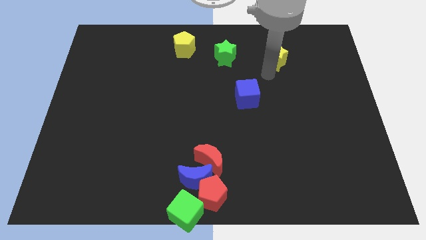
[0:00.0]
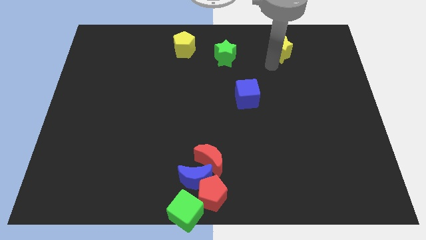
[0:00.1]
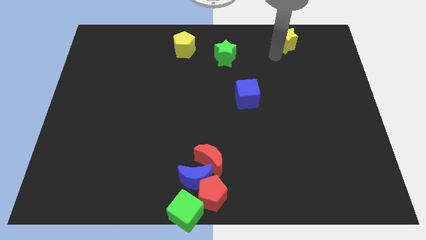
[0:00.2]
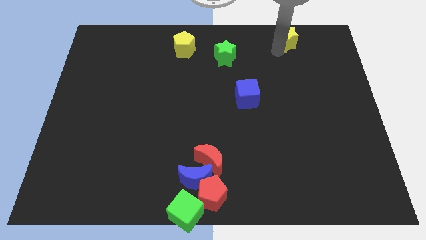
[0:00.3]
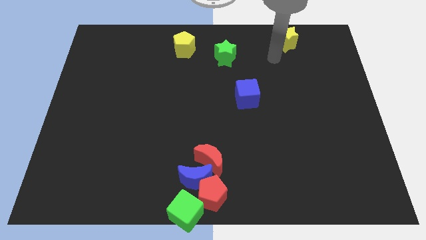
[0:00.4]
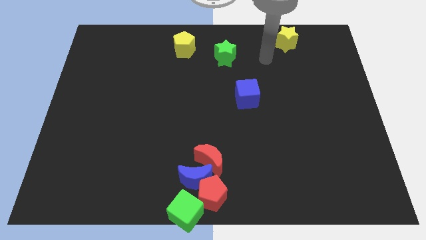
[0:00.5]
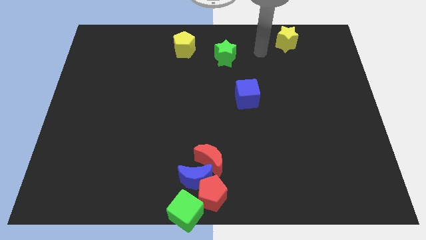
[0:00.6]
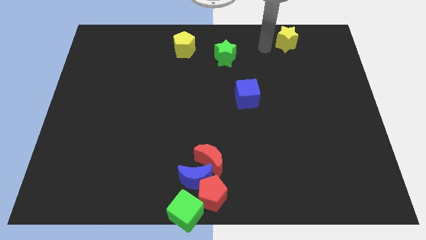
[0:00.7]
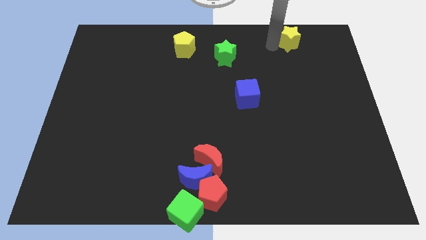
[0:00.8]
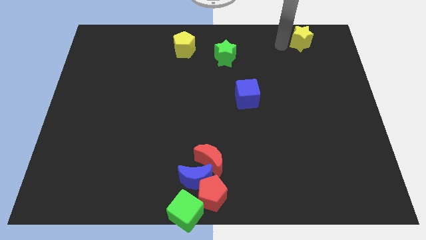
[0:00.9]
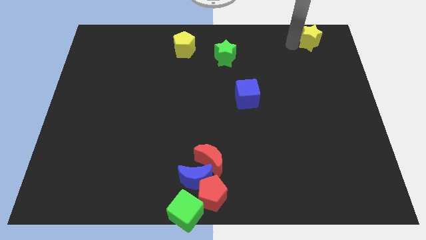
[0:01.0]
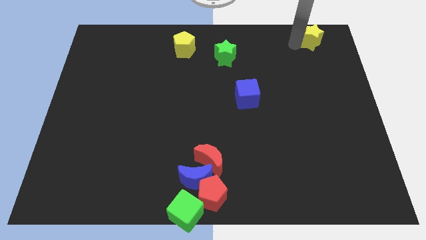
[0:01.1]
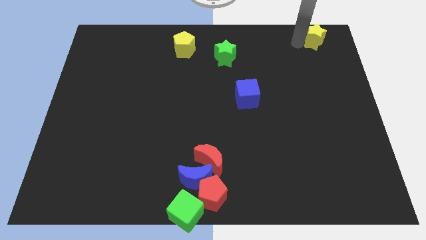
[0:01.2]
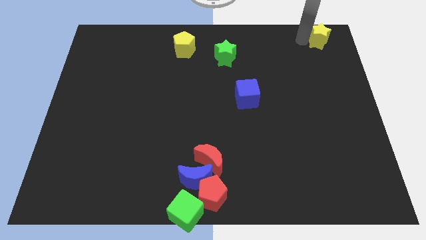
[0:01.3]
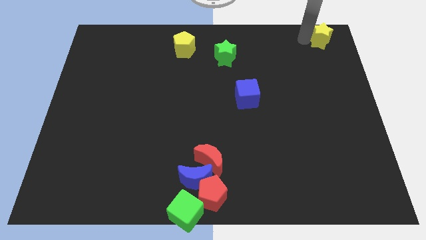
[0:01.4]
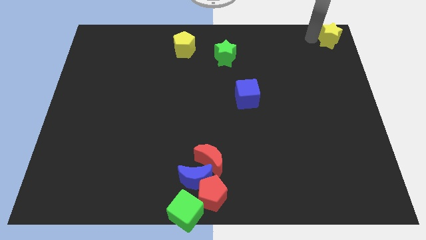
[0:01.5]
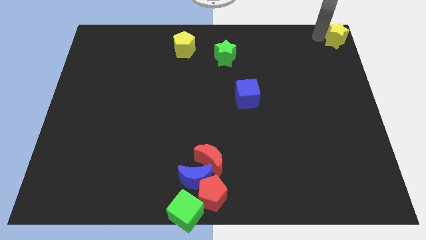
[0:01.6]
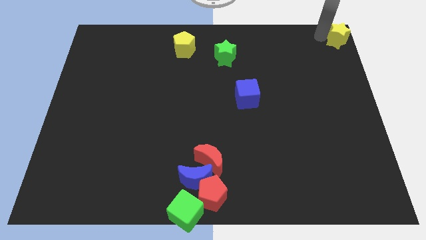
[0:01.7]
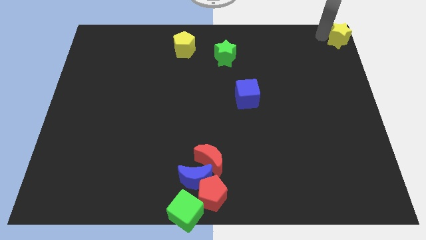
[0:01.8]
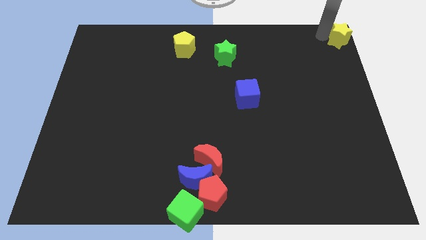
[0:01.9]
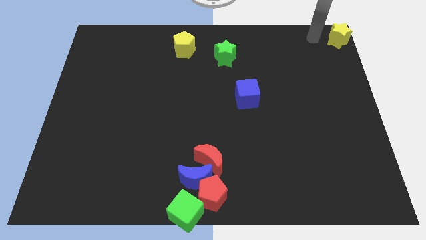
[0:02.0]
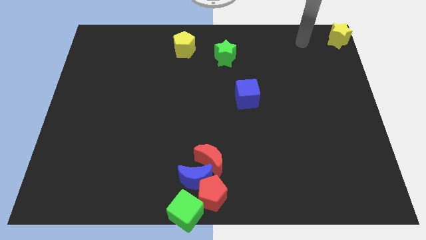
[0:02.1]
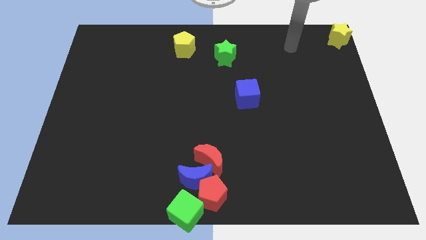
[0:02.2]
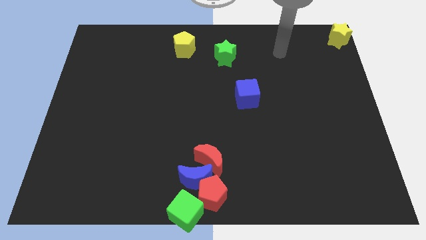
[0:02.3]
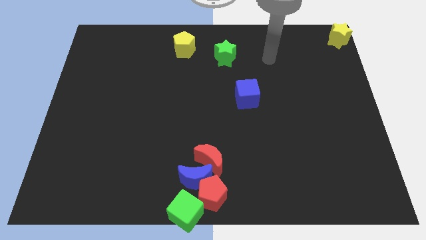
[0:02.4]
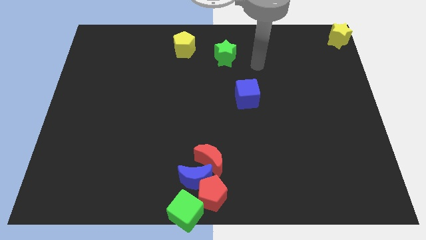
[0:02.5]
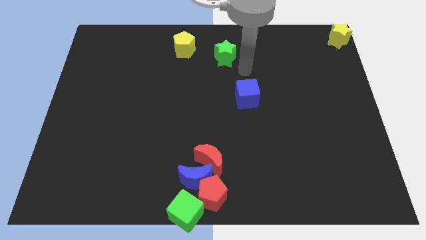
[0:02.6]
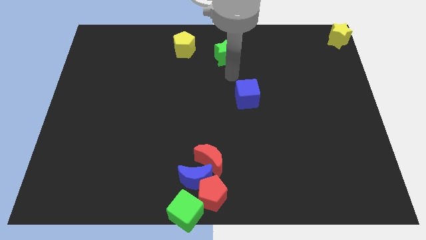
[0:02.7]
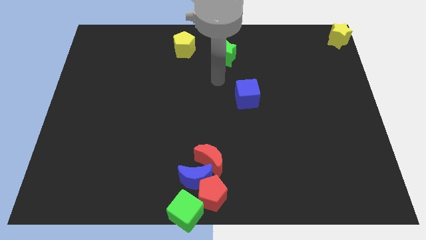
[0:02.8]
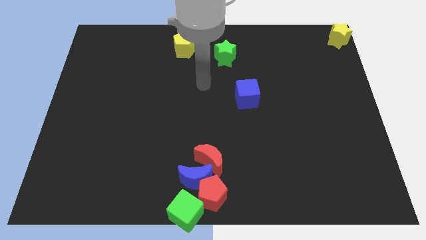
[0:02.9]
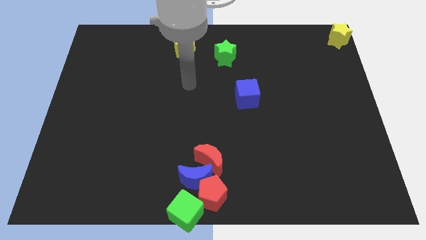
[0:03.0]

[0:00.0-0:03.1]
place the yellow star at the top right corner

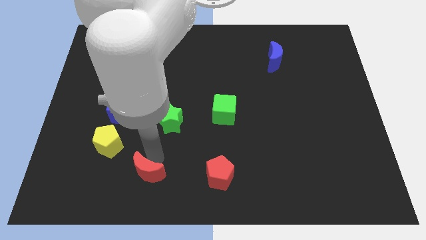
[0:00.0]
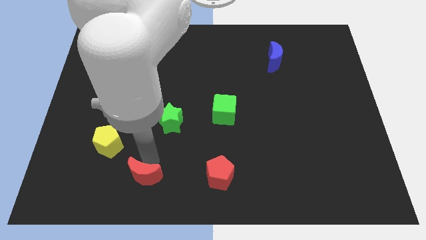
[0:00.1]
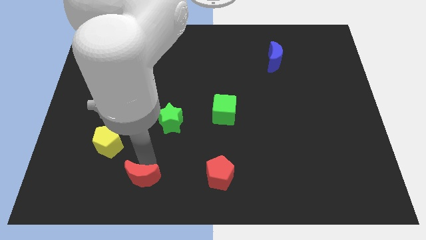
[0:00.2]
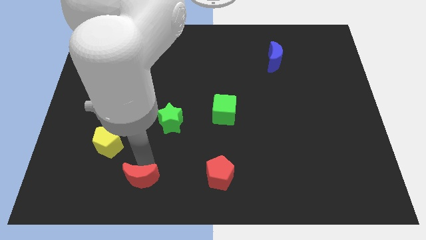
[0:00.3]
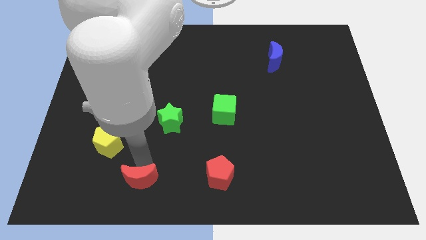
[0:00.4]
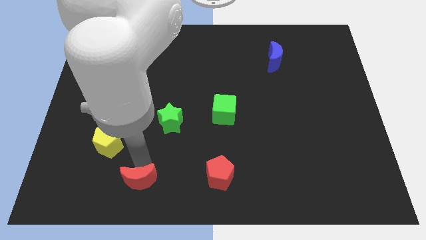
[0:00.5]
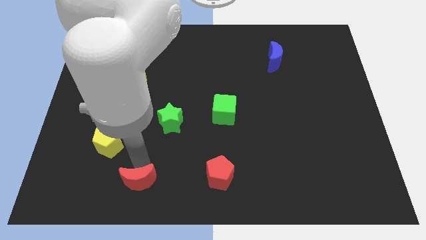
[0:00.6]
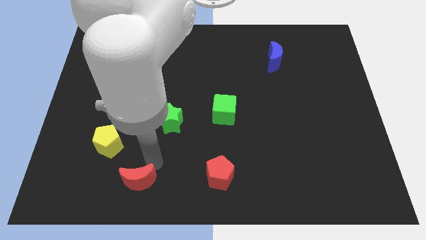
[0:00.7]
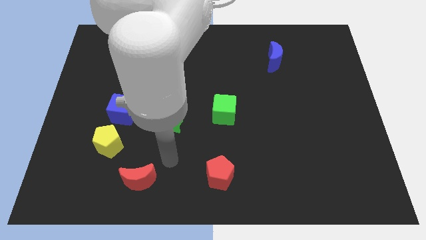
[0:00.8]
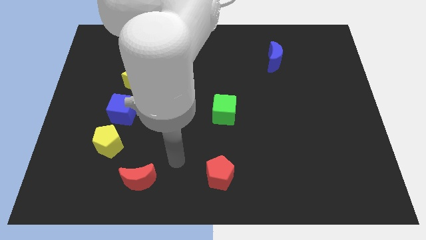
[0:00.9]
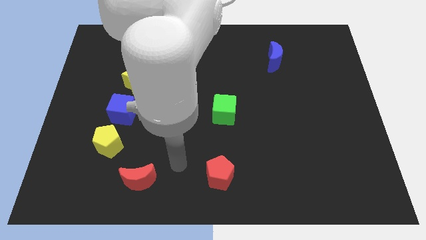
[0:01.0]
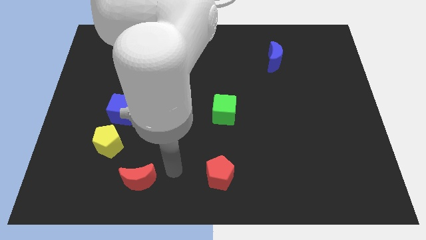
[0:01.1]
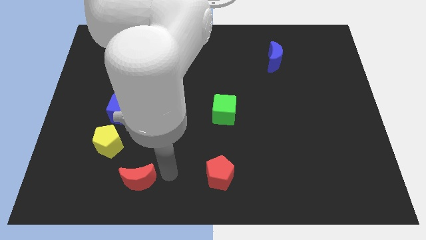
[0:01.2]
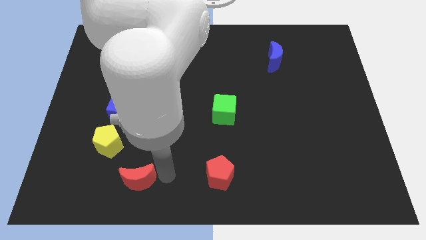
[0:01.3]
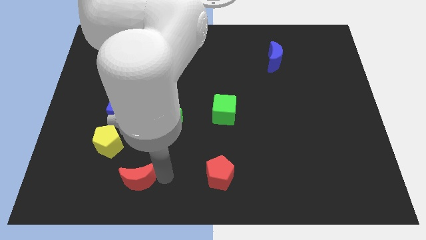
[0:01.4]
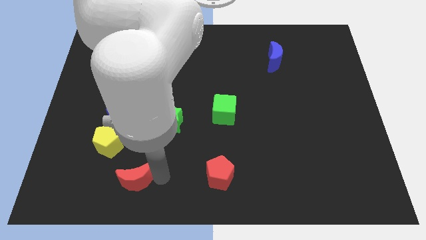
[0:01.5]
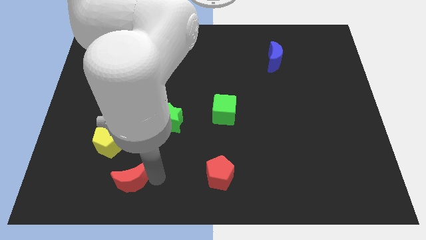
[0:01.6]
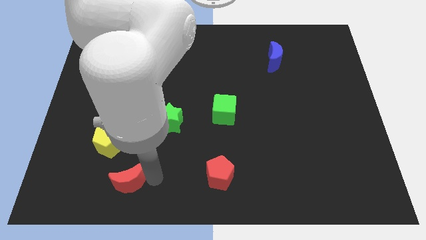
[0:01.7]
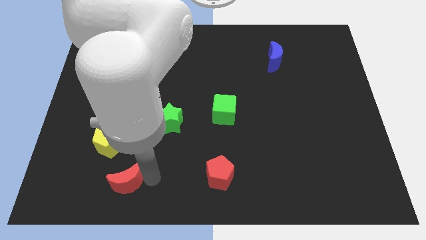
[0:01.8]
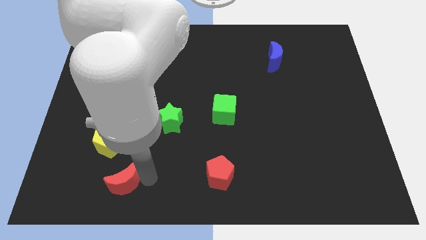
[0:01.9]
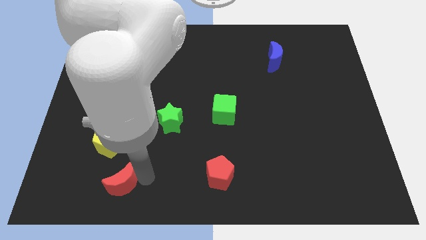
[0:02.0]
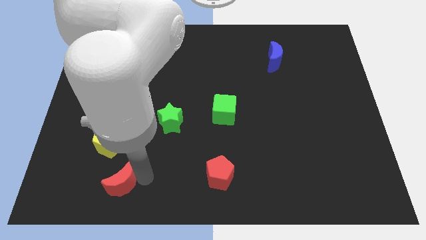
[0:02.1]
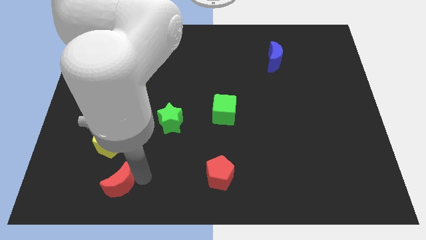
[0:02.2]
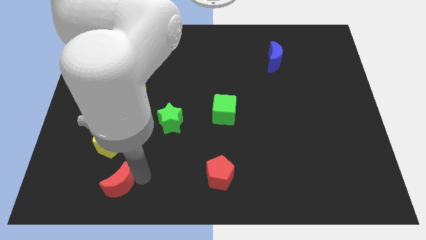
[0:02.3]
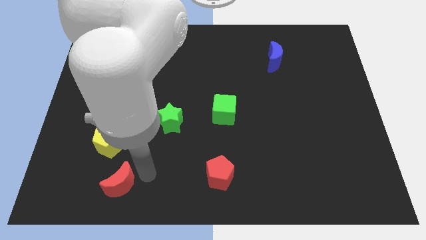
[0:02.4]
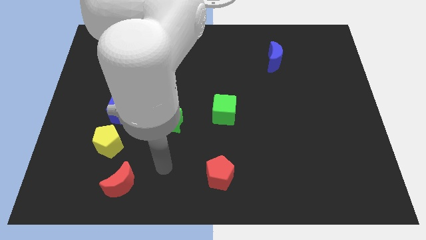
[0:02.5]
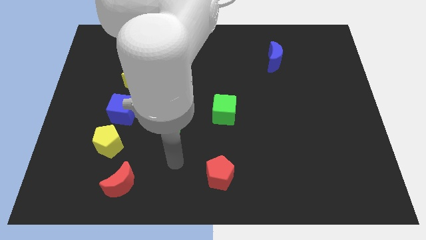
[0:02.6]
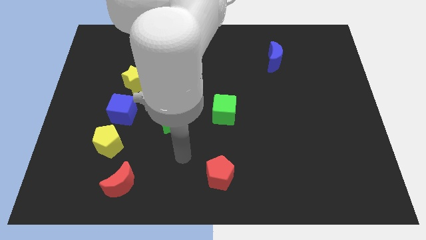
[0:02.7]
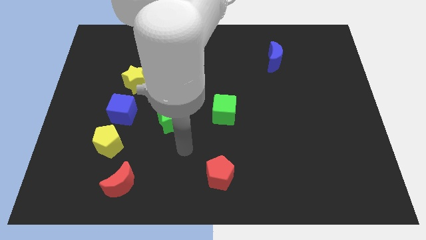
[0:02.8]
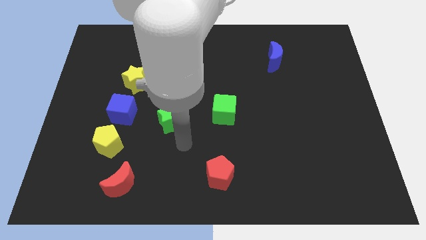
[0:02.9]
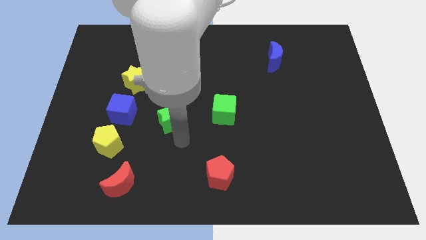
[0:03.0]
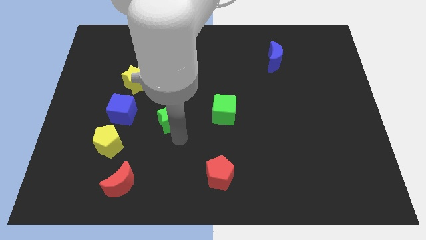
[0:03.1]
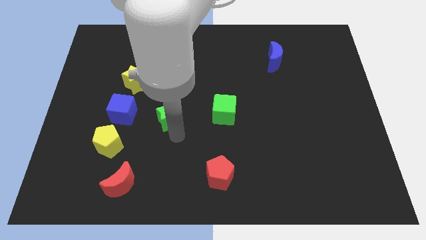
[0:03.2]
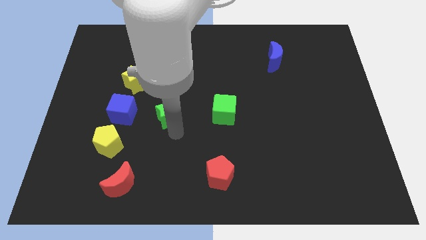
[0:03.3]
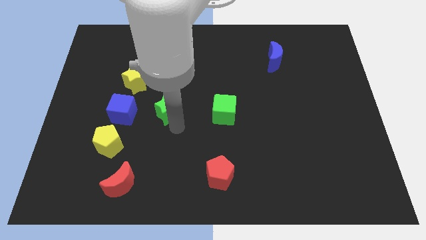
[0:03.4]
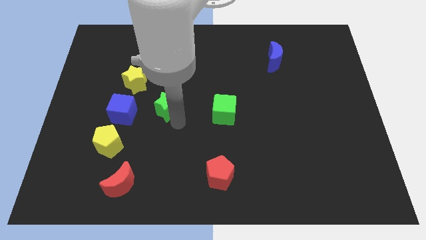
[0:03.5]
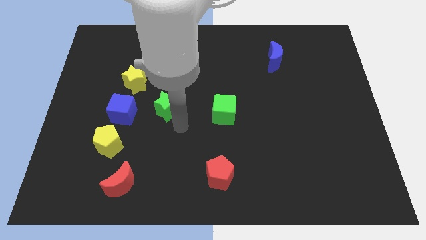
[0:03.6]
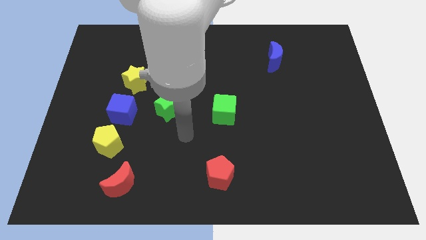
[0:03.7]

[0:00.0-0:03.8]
push green star slightly upwards

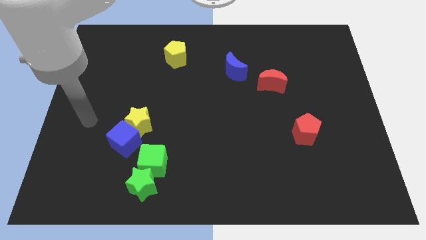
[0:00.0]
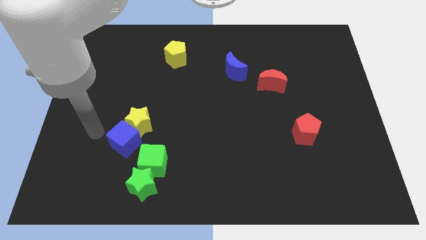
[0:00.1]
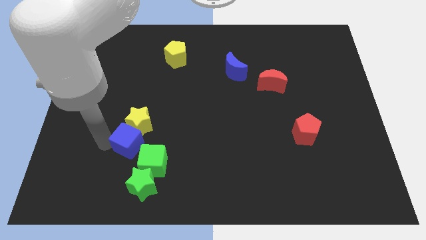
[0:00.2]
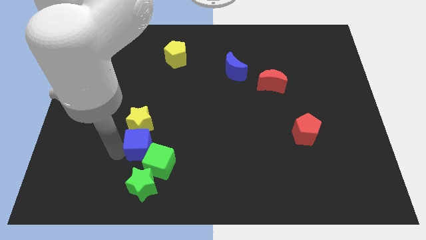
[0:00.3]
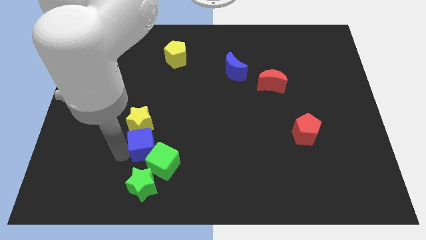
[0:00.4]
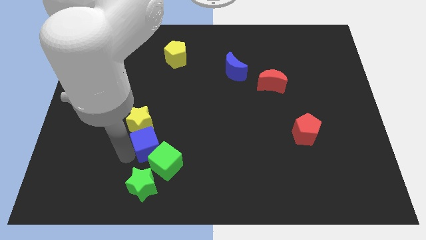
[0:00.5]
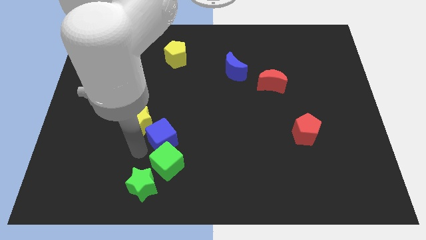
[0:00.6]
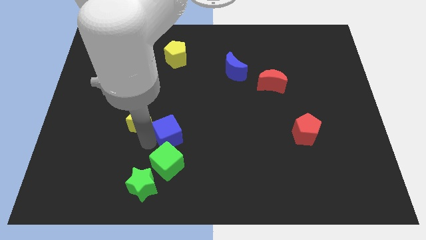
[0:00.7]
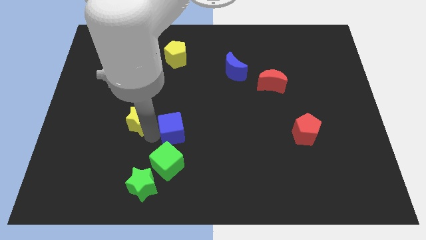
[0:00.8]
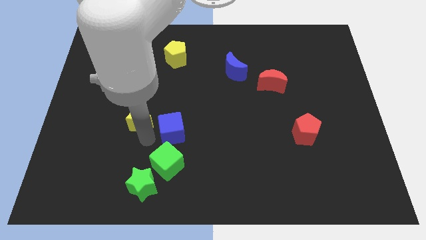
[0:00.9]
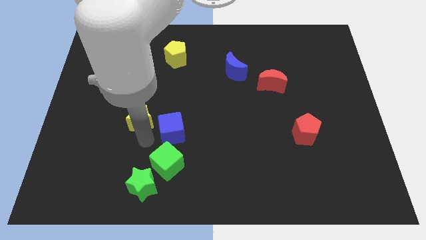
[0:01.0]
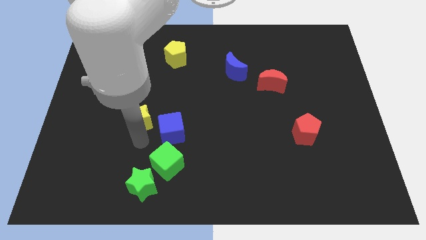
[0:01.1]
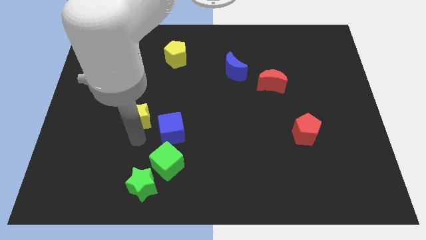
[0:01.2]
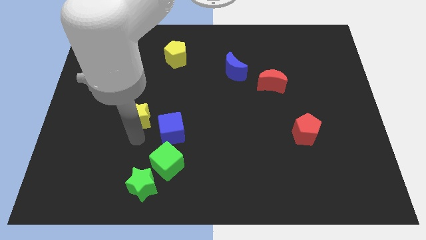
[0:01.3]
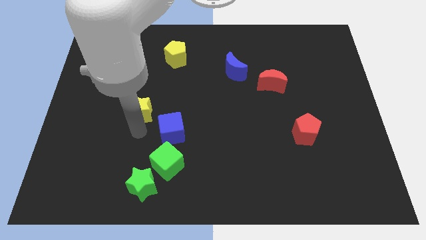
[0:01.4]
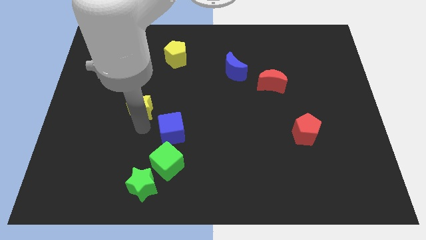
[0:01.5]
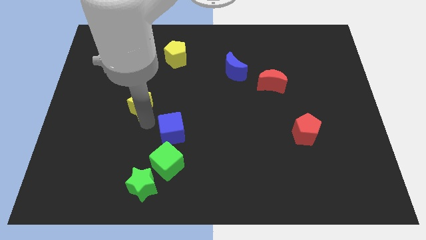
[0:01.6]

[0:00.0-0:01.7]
separate the yellow star and the blue cube

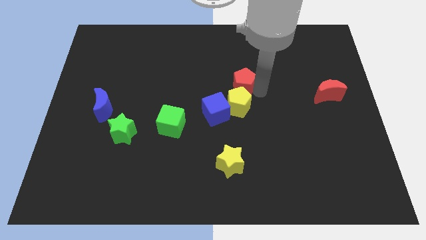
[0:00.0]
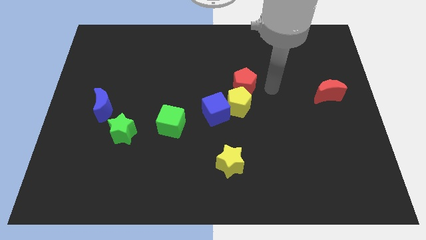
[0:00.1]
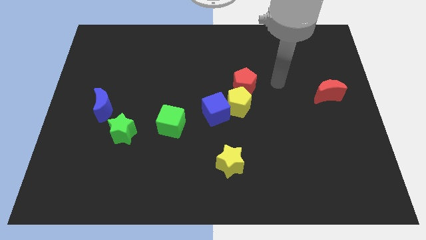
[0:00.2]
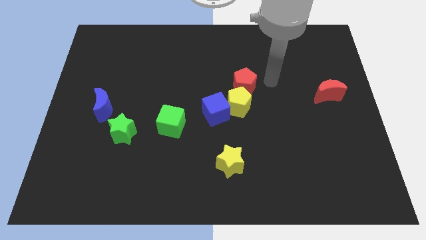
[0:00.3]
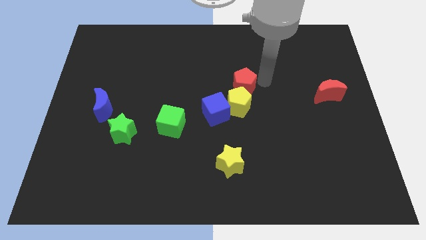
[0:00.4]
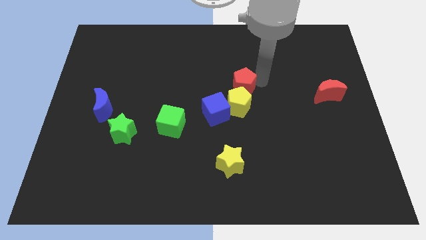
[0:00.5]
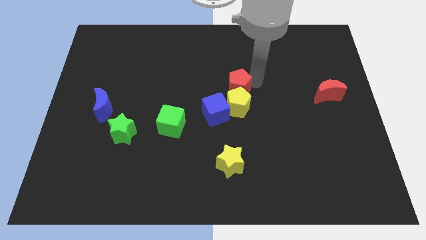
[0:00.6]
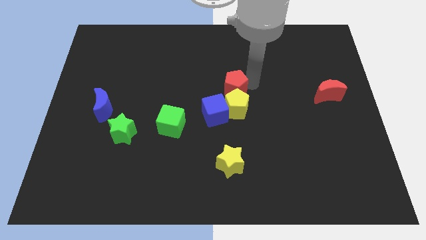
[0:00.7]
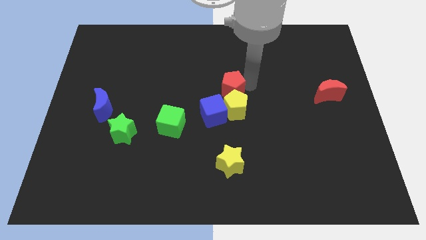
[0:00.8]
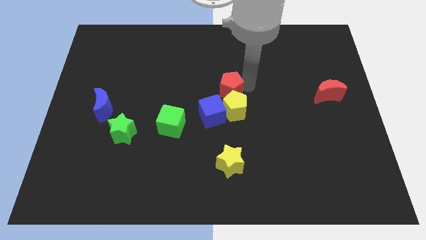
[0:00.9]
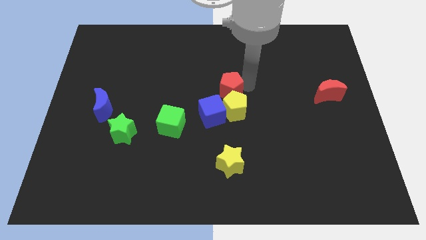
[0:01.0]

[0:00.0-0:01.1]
push the red pentagon into the yellow pentagon
